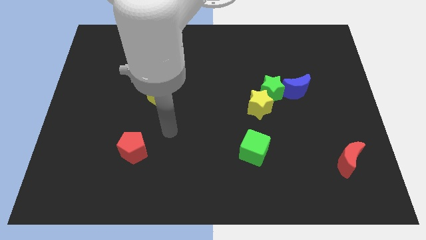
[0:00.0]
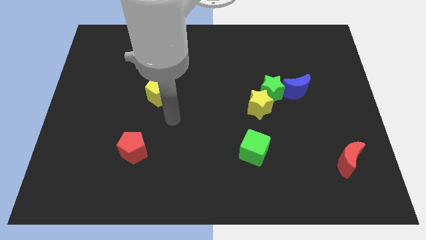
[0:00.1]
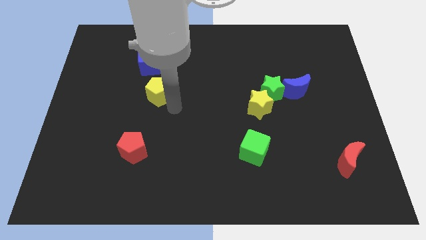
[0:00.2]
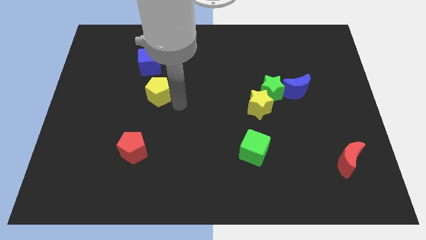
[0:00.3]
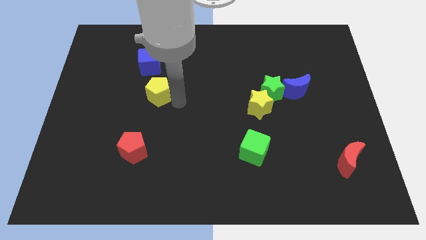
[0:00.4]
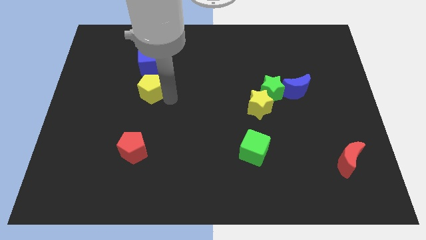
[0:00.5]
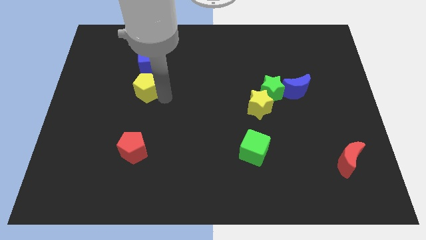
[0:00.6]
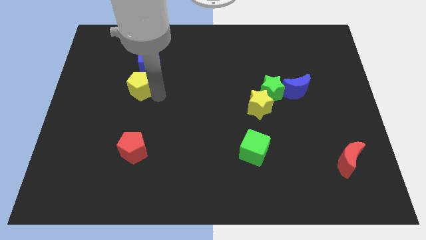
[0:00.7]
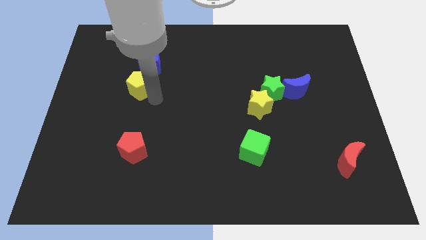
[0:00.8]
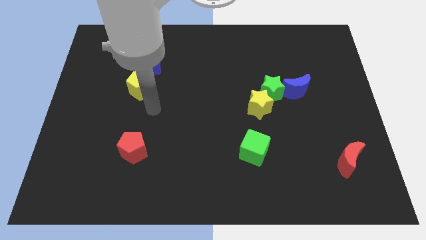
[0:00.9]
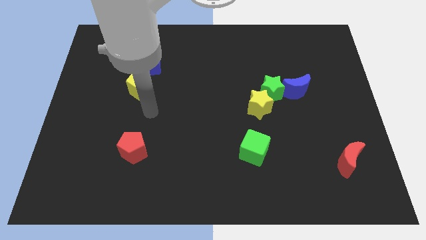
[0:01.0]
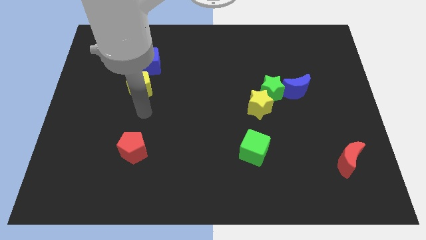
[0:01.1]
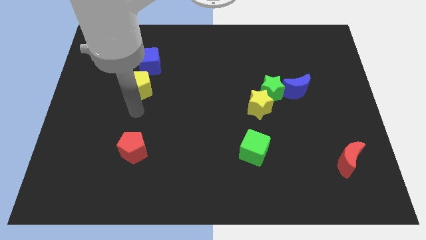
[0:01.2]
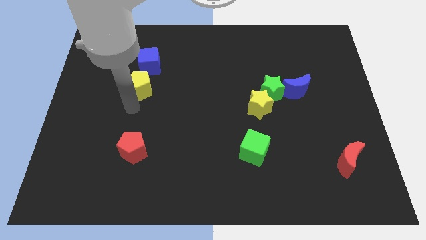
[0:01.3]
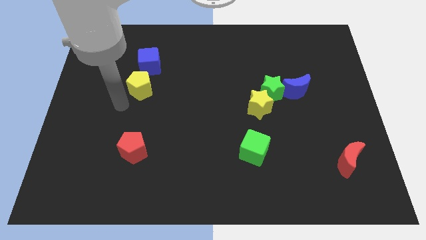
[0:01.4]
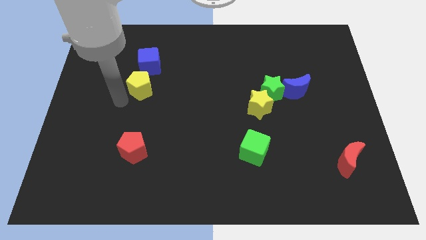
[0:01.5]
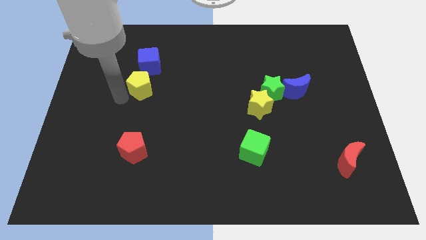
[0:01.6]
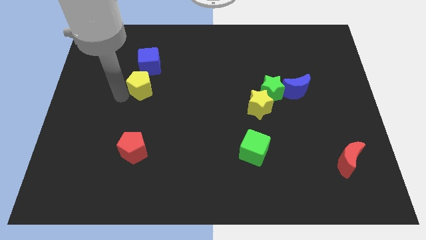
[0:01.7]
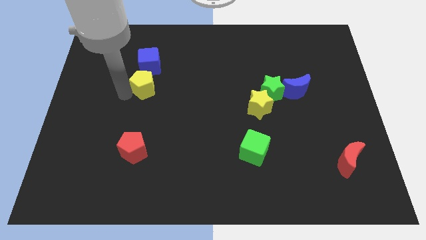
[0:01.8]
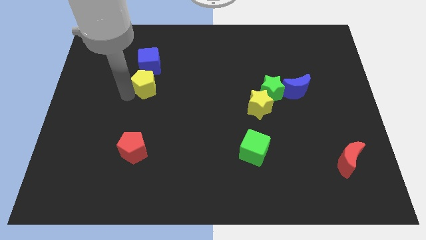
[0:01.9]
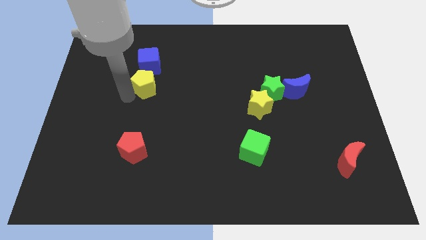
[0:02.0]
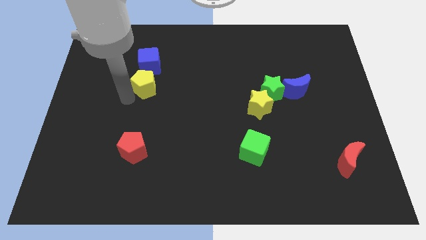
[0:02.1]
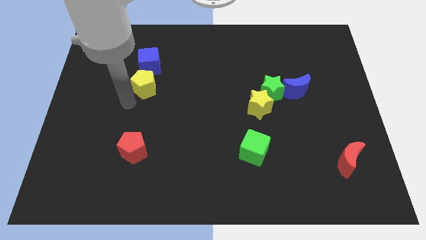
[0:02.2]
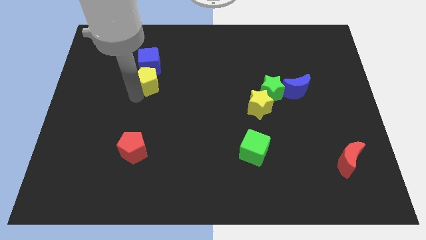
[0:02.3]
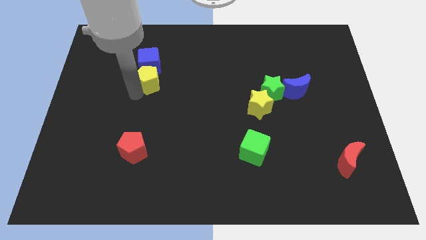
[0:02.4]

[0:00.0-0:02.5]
move the yellow pentagon to the bottom of the blue cube

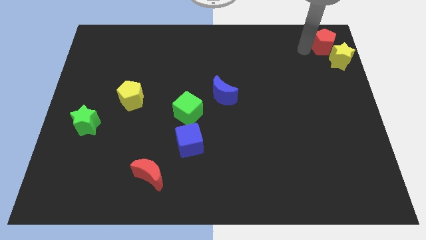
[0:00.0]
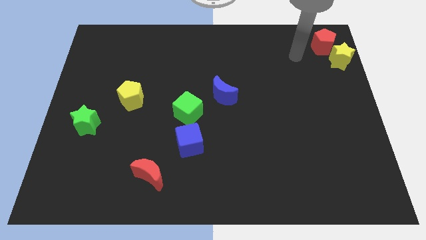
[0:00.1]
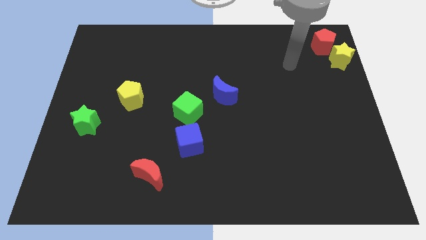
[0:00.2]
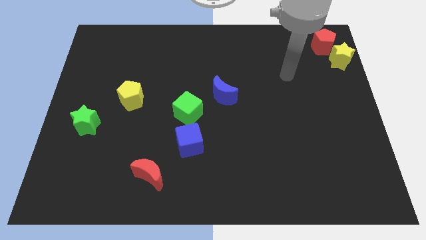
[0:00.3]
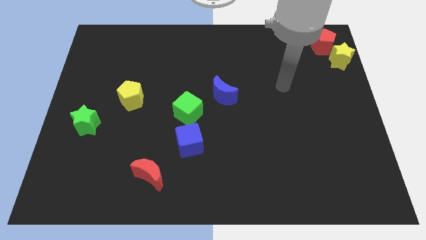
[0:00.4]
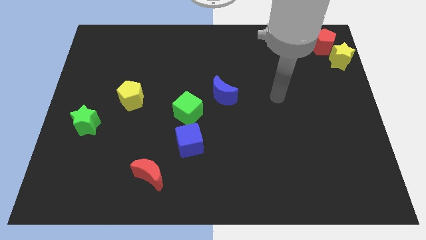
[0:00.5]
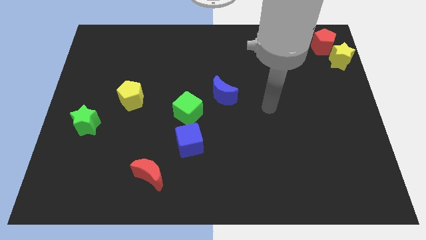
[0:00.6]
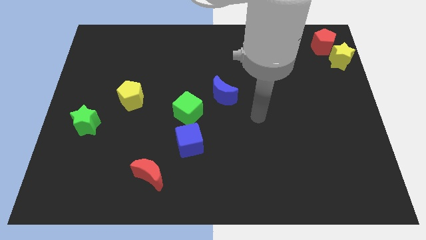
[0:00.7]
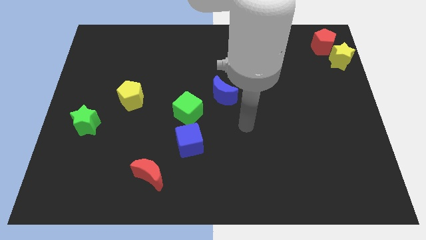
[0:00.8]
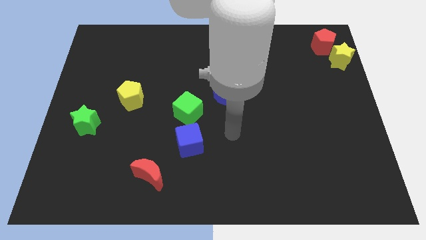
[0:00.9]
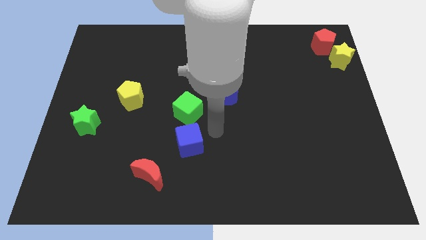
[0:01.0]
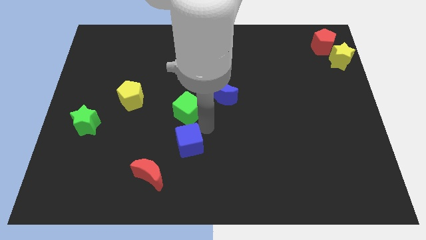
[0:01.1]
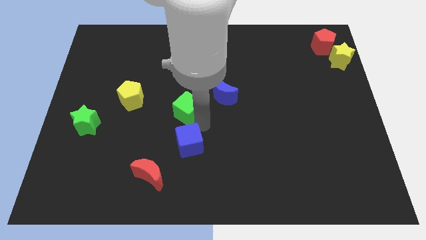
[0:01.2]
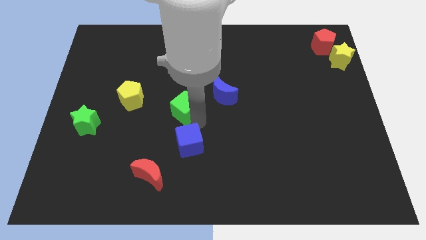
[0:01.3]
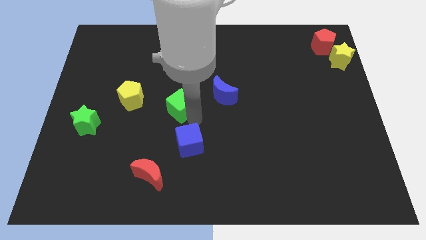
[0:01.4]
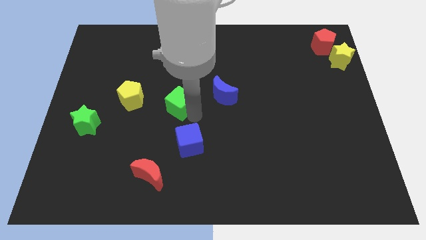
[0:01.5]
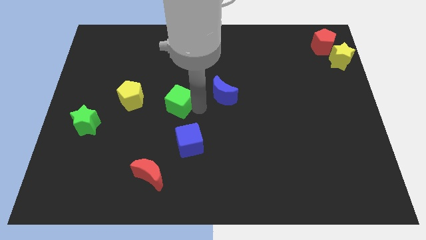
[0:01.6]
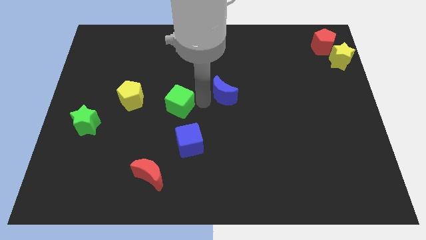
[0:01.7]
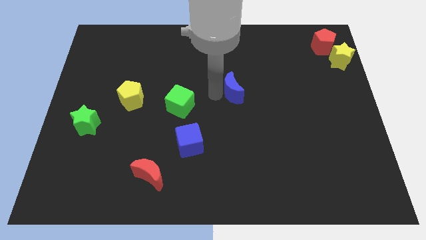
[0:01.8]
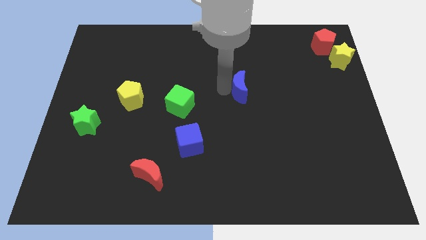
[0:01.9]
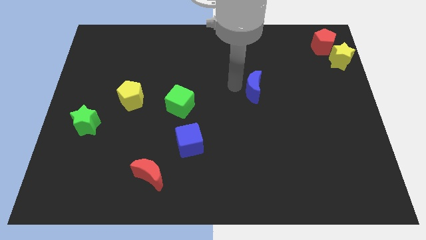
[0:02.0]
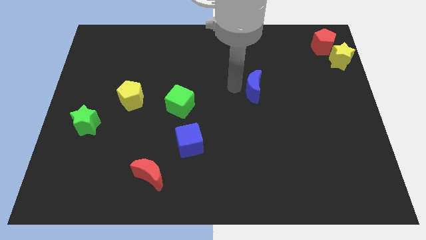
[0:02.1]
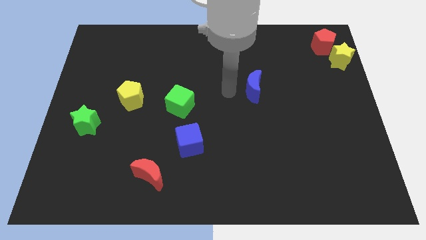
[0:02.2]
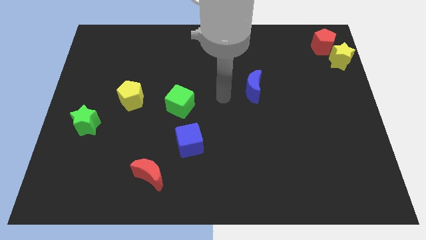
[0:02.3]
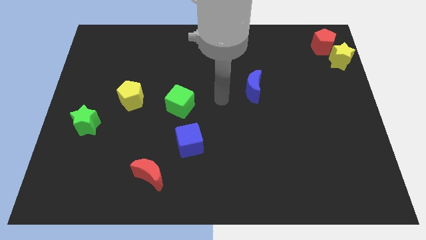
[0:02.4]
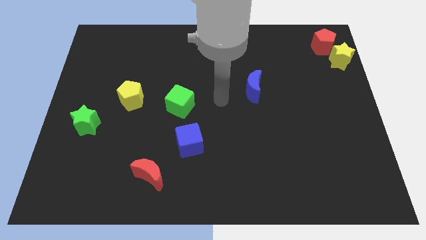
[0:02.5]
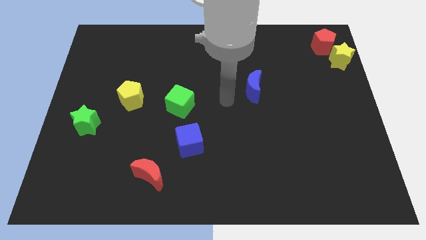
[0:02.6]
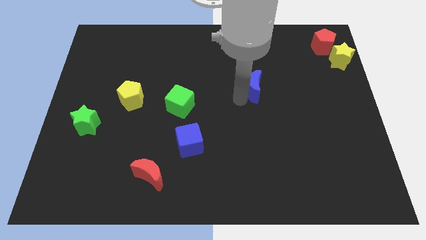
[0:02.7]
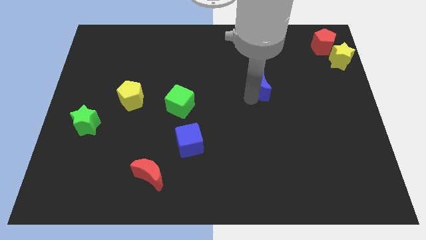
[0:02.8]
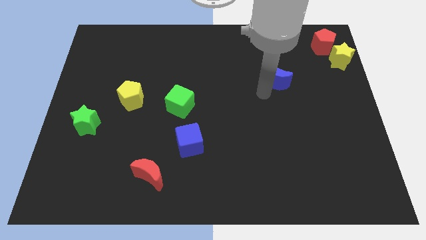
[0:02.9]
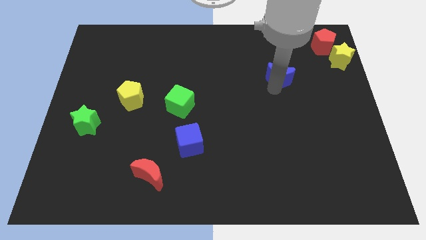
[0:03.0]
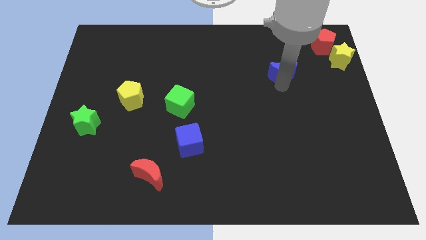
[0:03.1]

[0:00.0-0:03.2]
move the blue crescent towards red pentagon

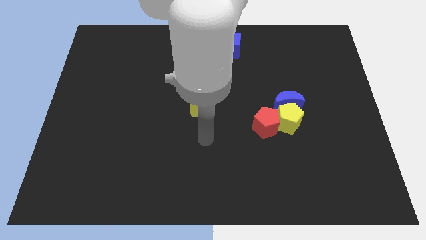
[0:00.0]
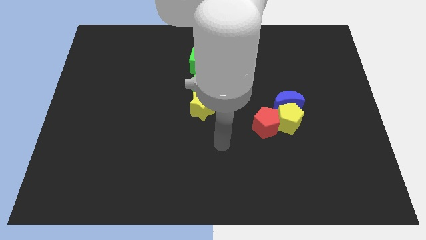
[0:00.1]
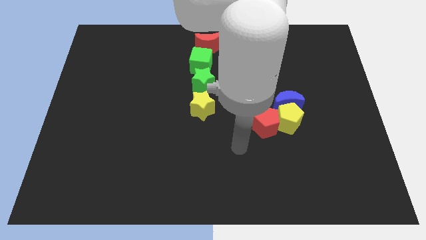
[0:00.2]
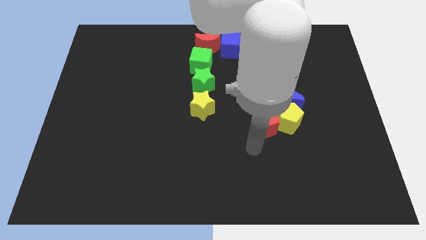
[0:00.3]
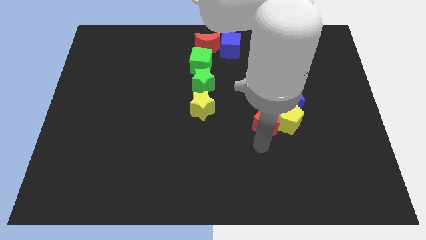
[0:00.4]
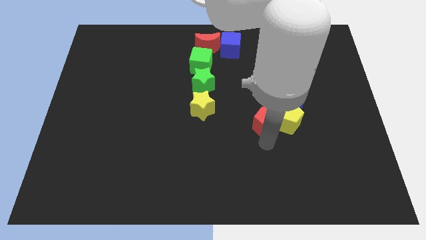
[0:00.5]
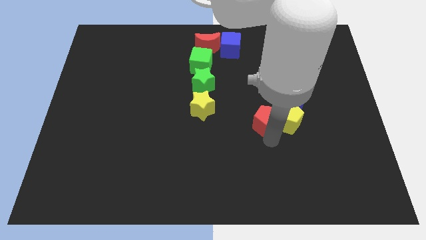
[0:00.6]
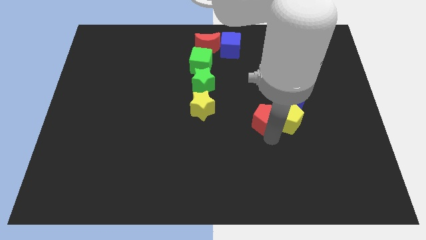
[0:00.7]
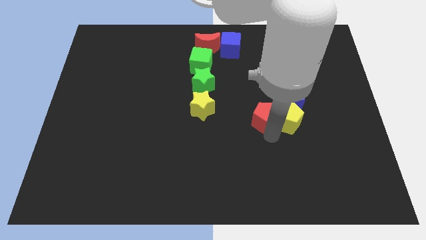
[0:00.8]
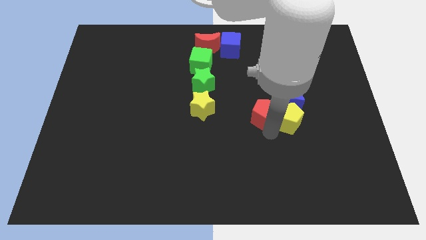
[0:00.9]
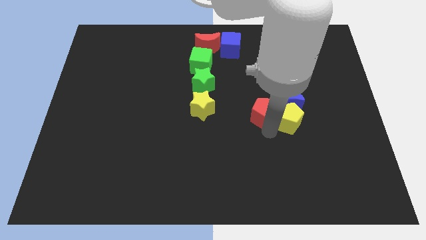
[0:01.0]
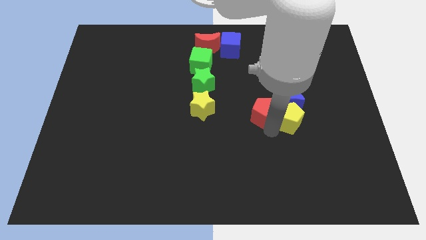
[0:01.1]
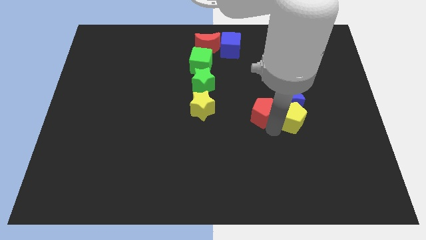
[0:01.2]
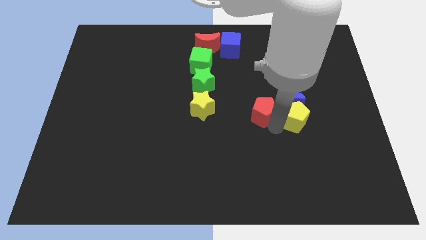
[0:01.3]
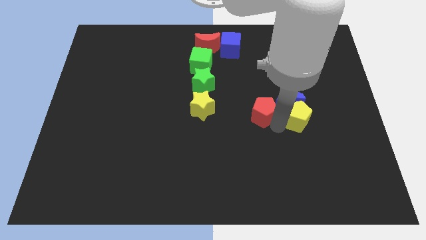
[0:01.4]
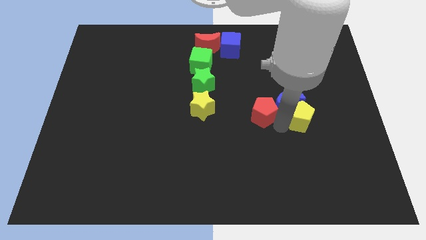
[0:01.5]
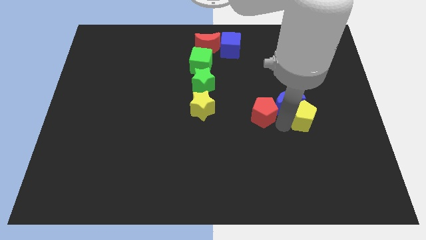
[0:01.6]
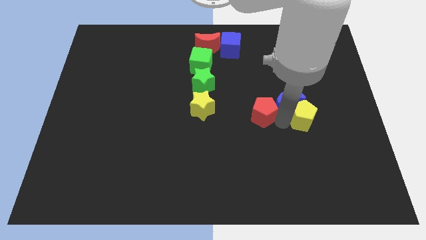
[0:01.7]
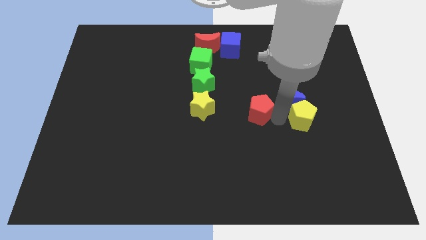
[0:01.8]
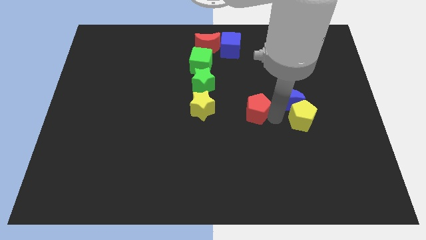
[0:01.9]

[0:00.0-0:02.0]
separate the red pentagon and yellow pentagon from each other

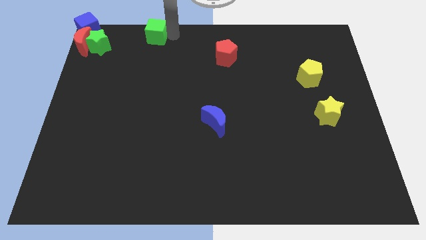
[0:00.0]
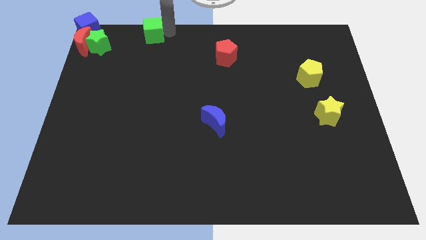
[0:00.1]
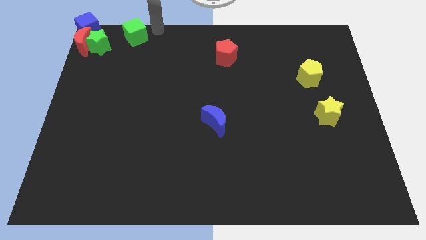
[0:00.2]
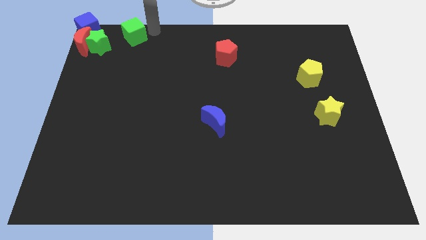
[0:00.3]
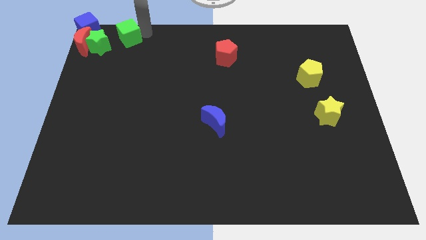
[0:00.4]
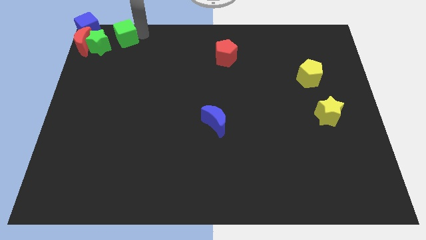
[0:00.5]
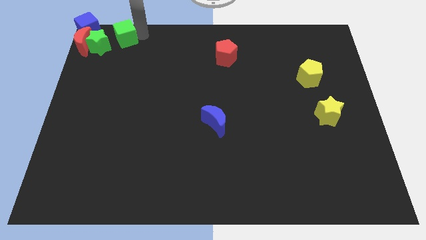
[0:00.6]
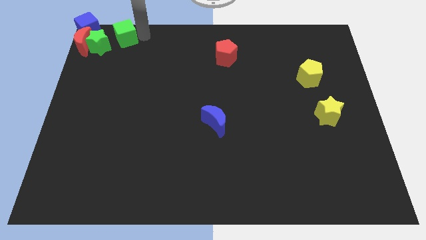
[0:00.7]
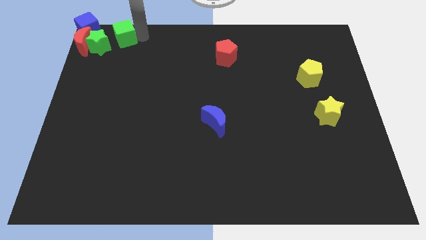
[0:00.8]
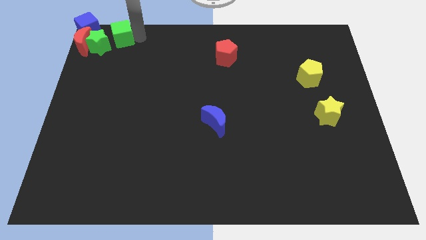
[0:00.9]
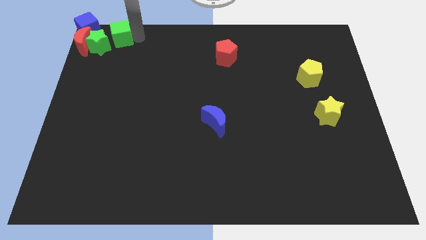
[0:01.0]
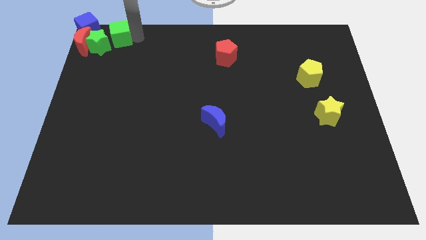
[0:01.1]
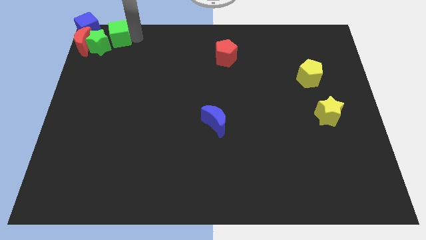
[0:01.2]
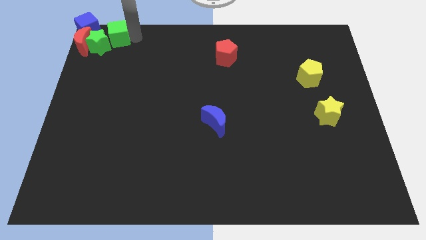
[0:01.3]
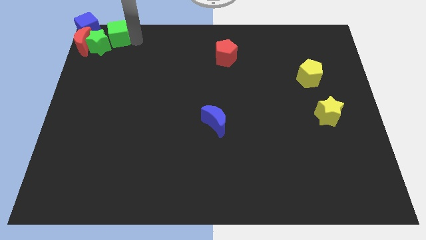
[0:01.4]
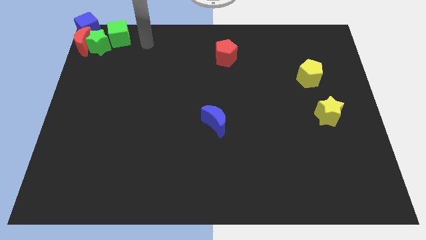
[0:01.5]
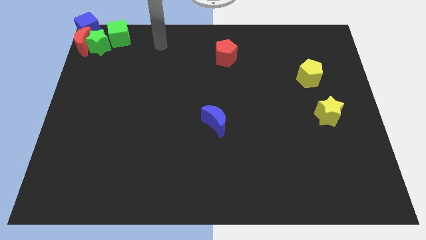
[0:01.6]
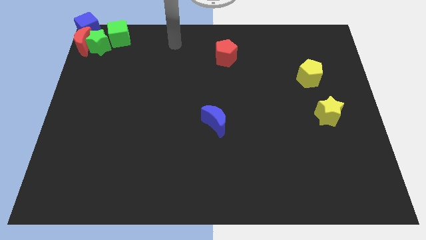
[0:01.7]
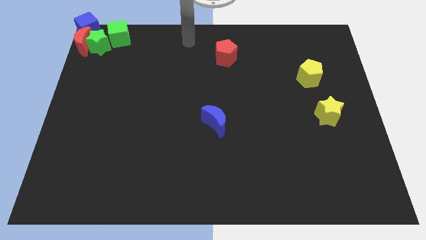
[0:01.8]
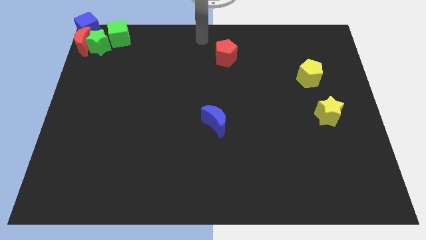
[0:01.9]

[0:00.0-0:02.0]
place the green cube diagonal top right to the green star
